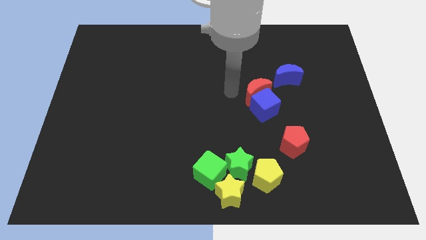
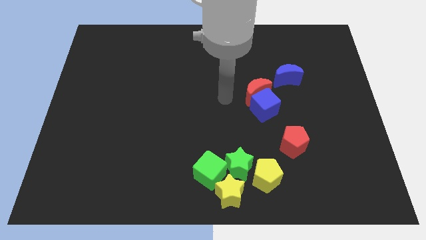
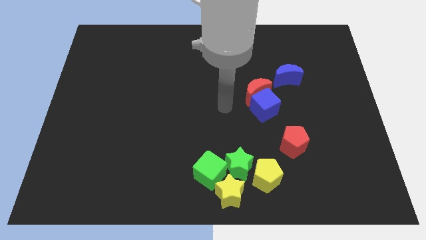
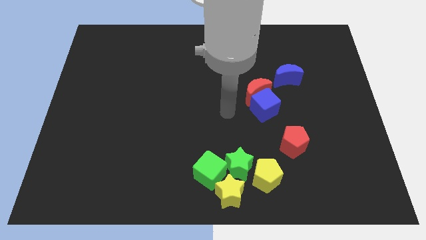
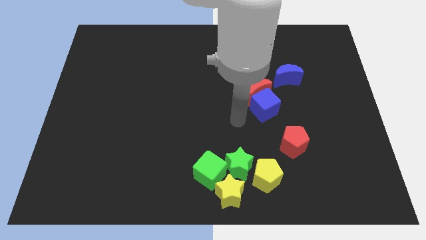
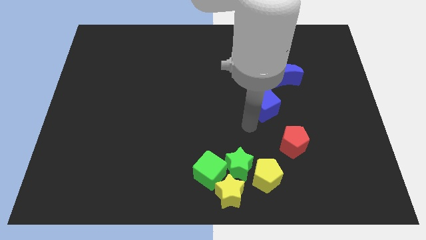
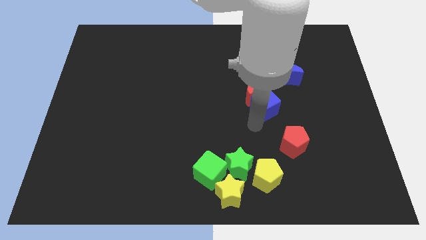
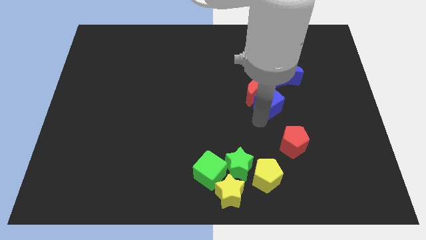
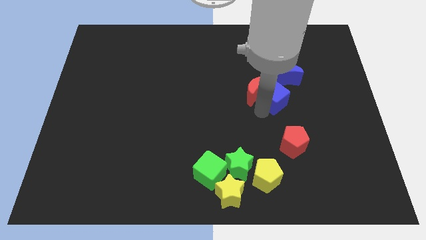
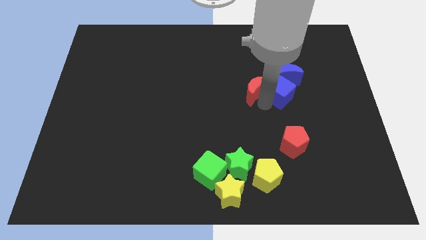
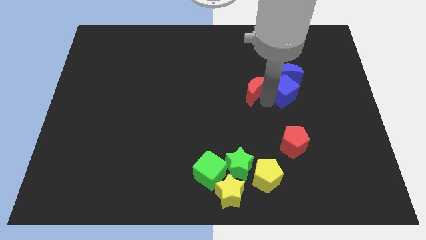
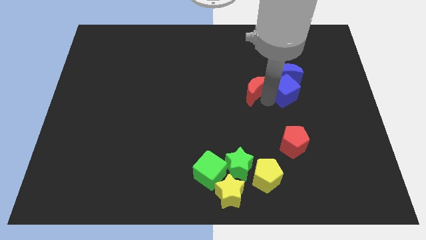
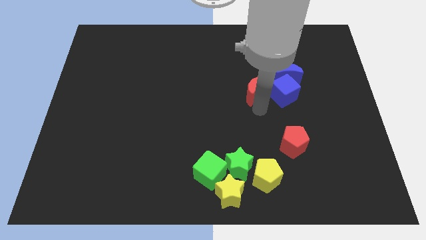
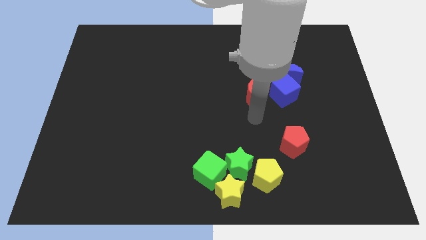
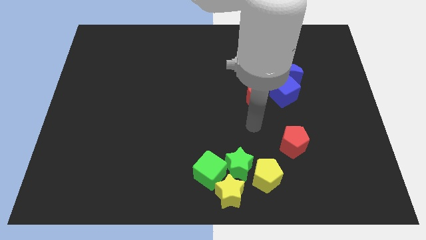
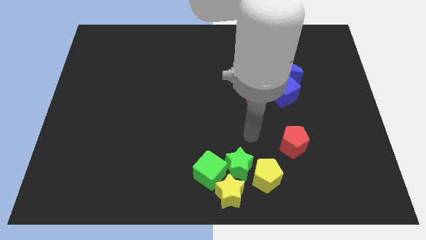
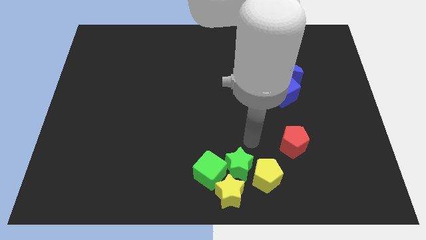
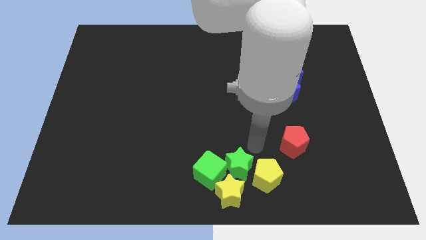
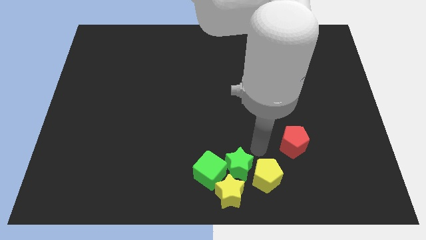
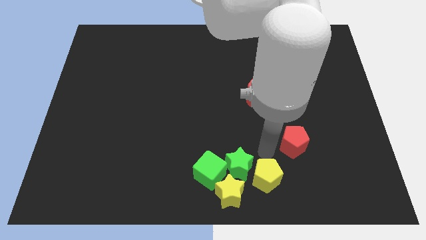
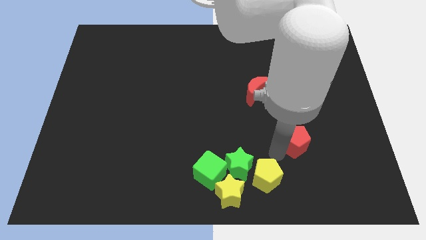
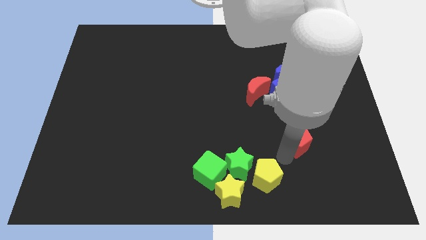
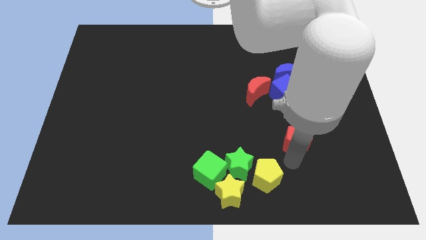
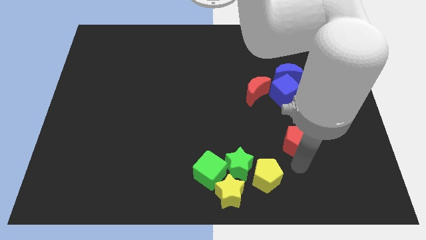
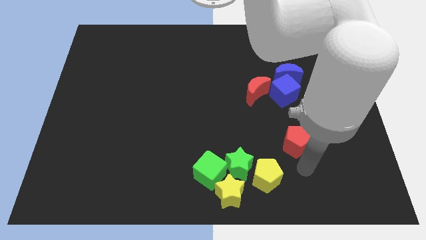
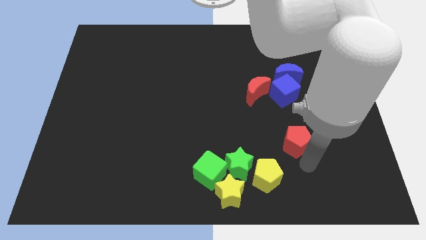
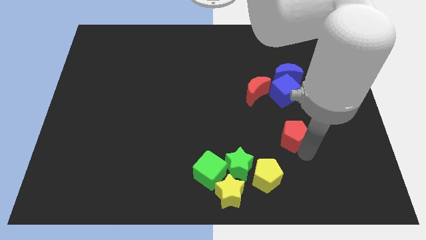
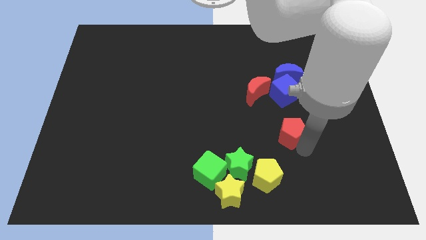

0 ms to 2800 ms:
move the blue cube into the blue crescent

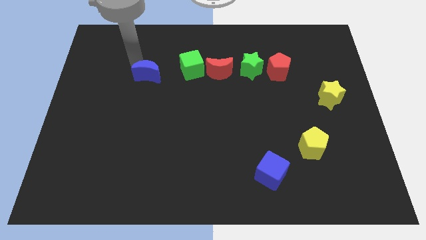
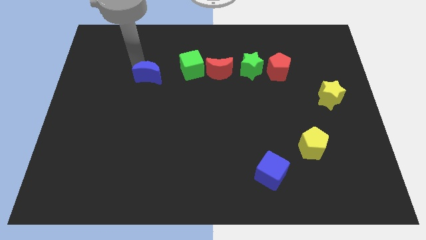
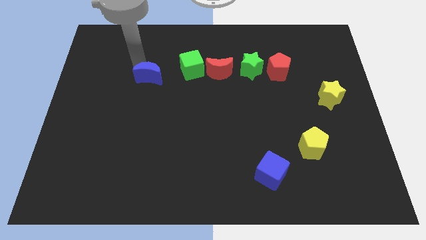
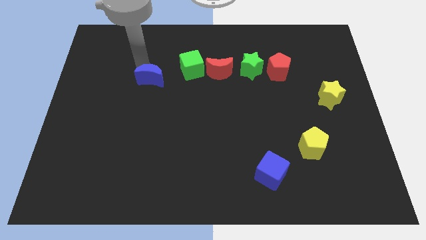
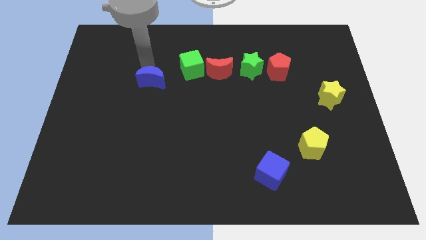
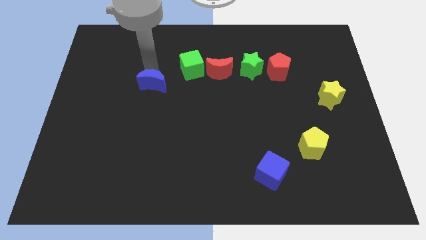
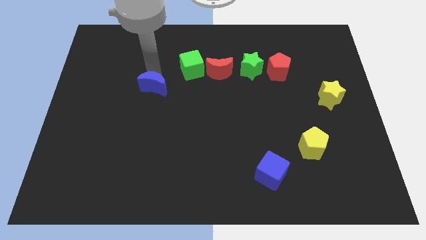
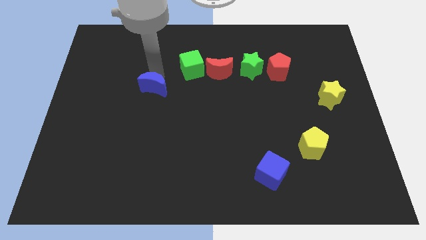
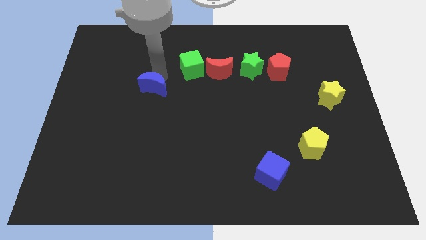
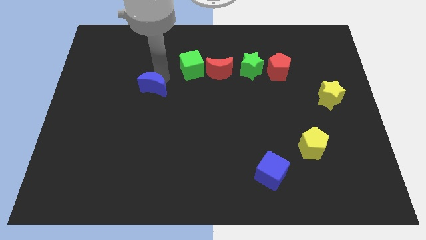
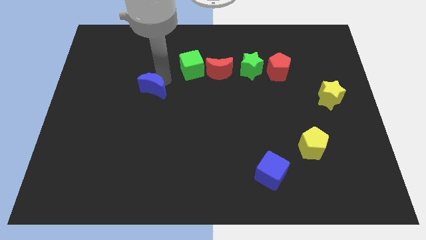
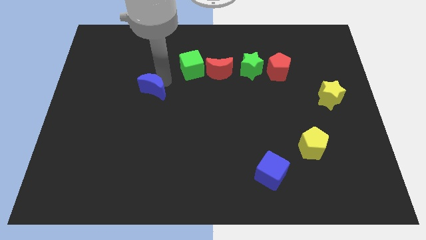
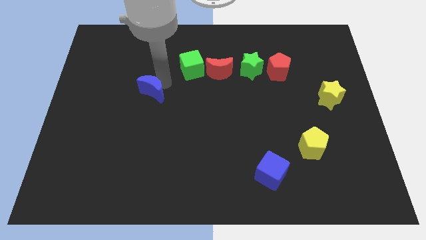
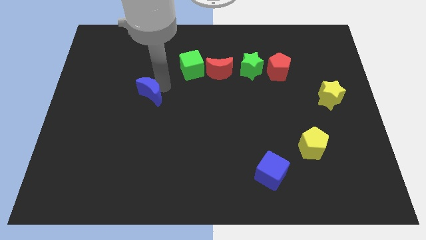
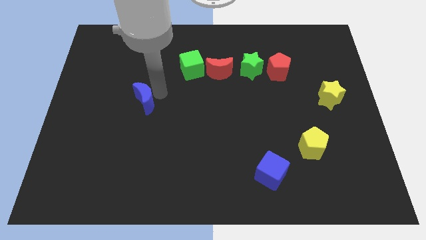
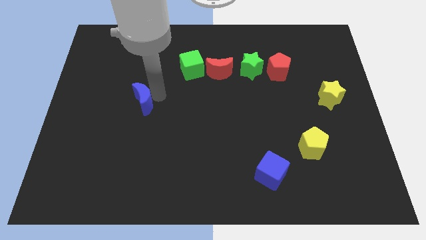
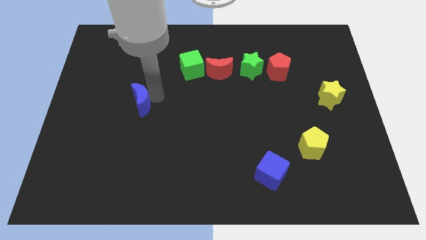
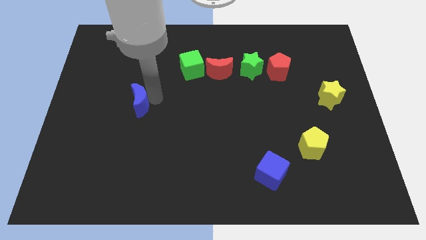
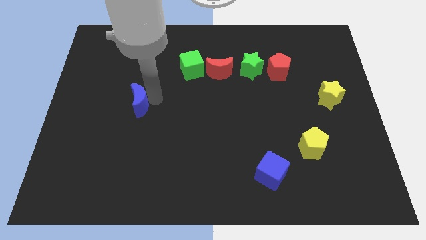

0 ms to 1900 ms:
push the blue moon slightly downwards

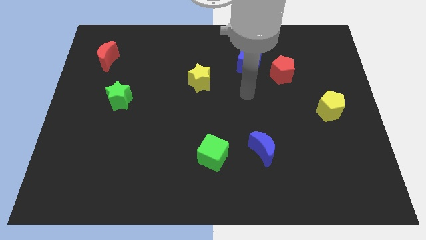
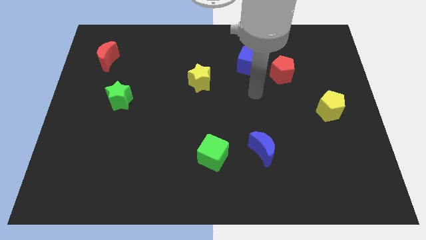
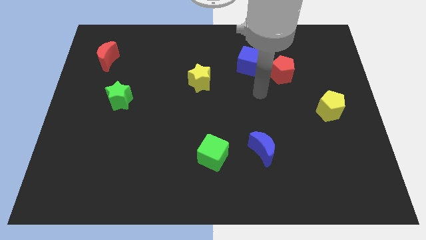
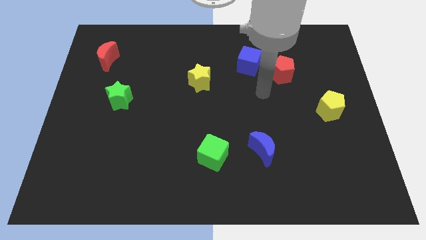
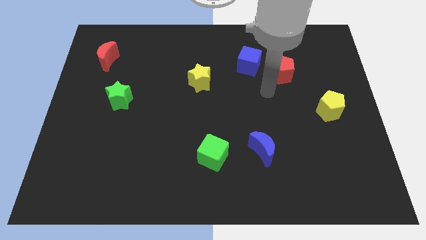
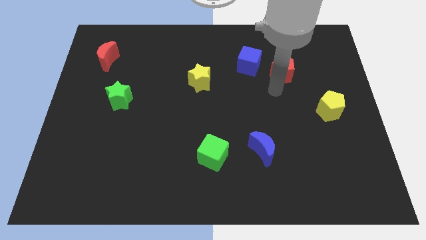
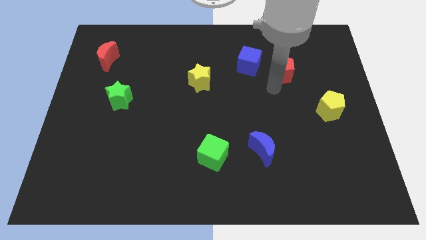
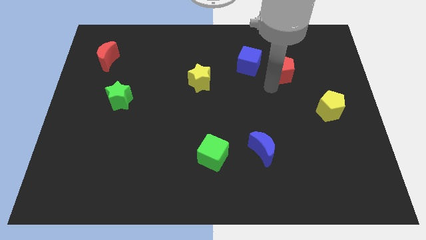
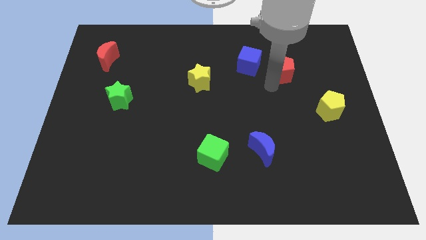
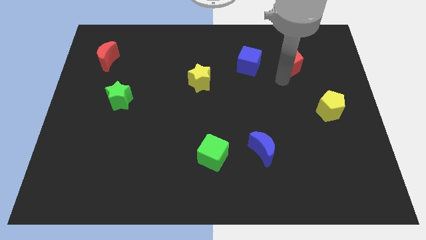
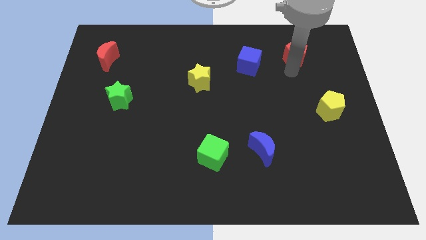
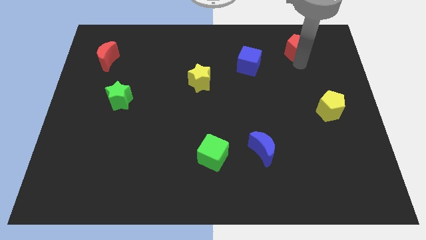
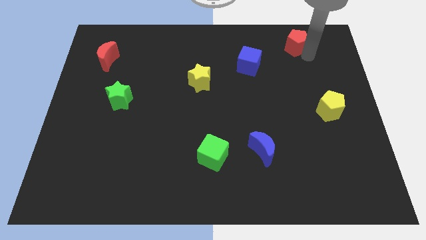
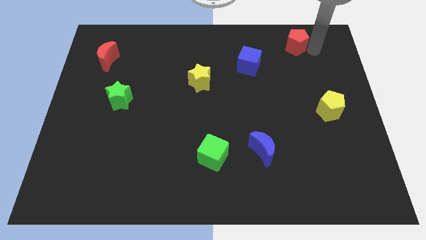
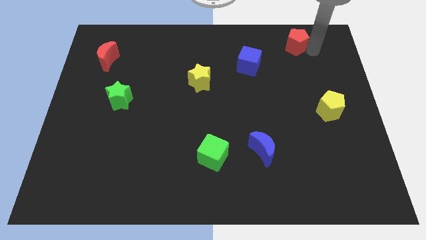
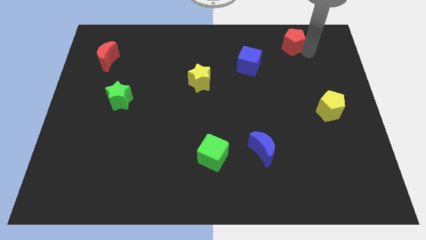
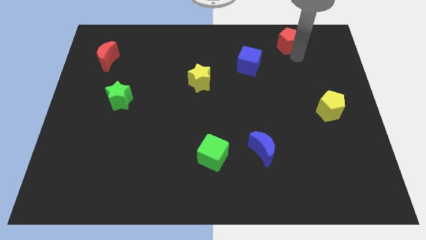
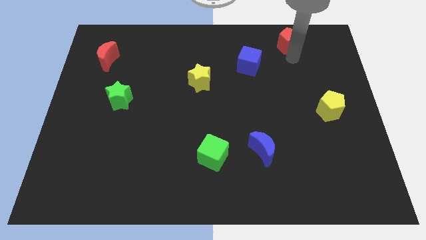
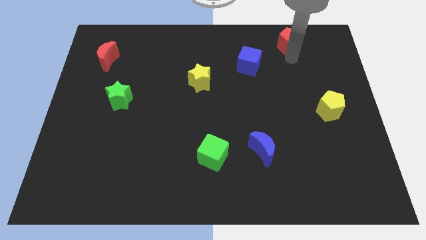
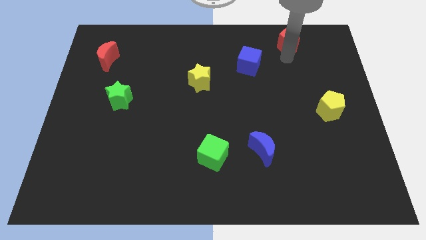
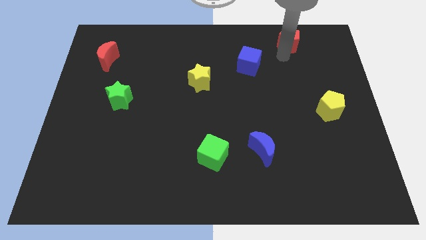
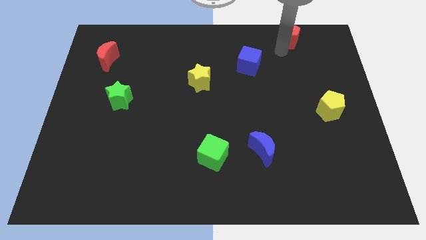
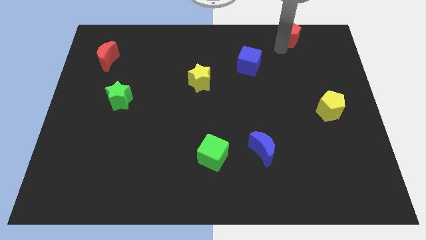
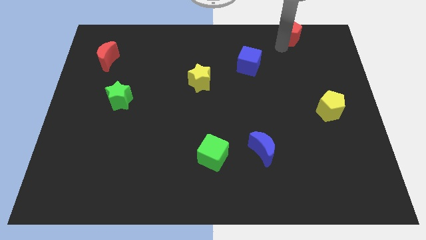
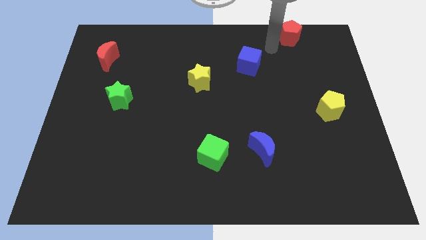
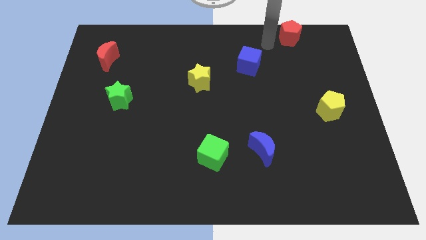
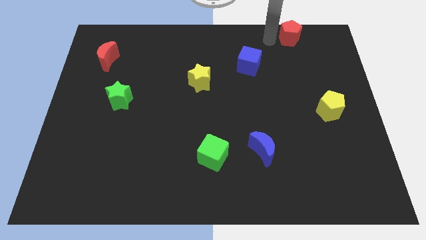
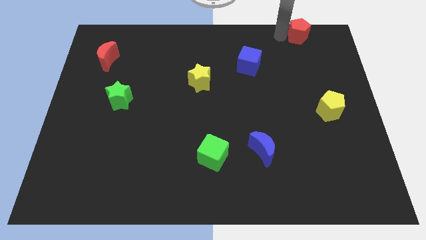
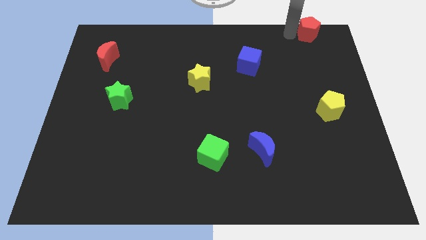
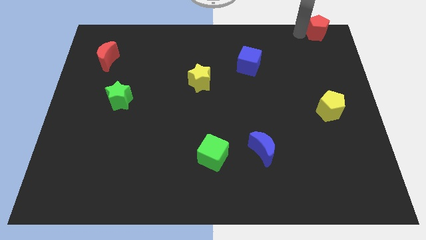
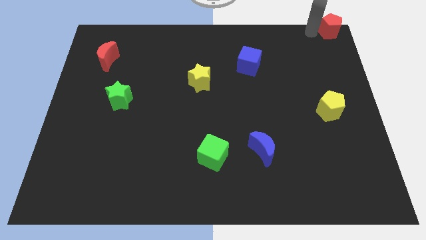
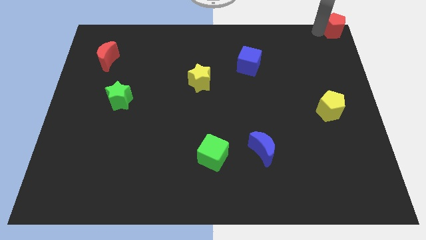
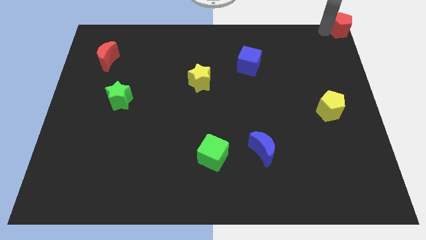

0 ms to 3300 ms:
push the red pentagon to top right of the board

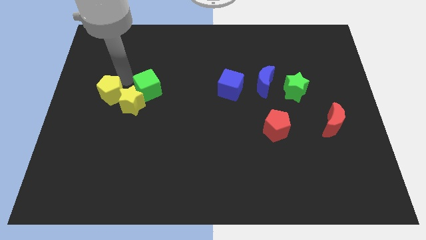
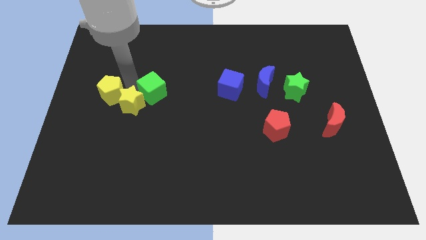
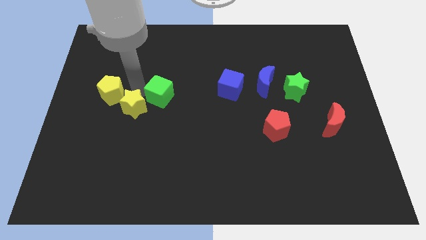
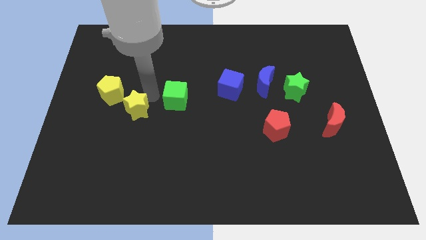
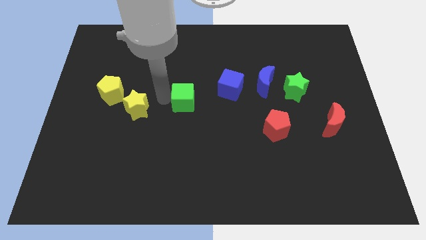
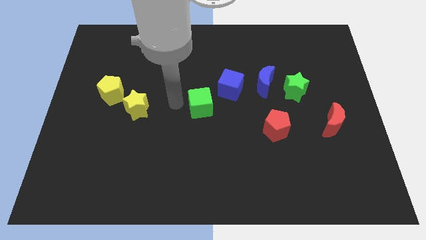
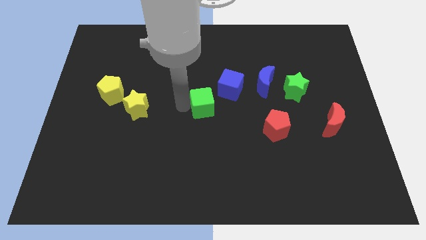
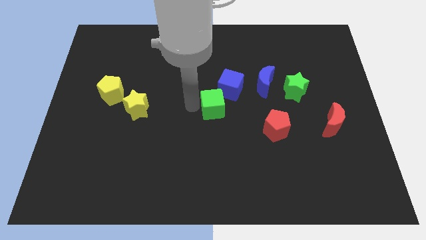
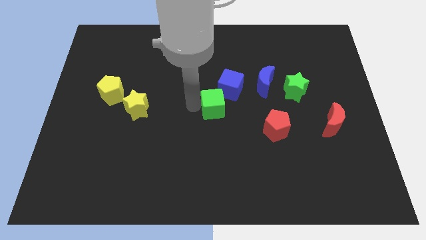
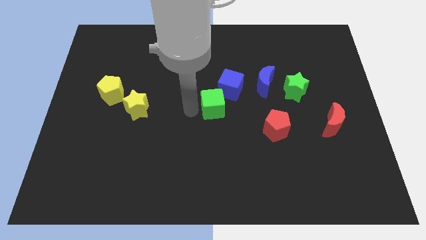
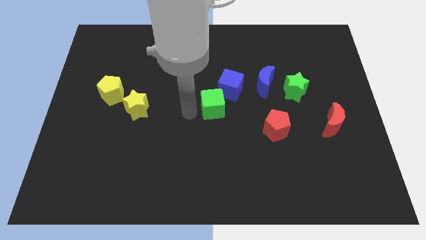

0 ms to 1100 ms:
move the green cube away from the yellow star
